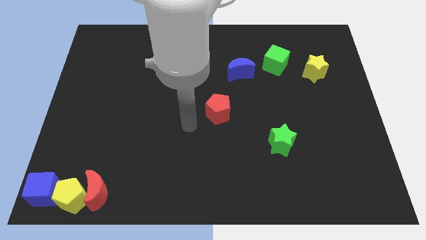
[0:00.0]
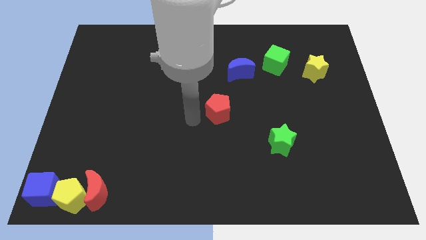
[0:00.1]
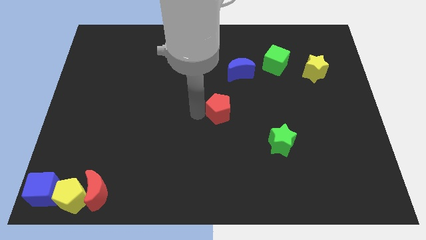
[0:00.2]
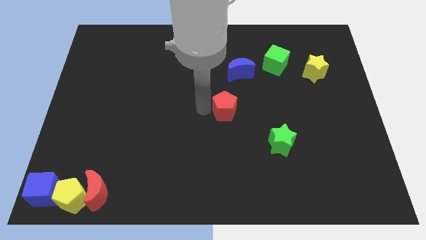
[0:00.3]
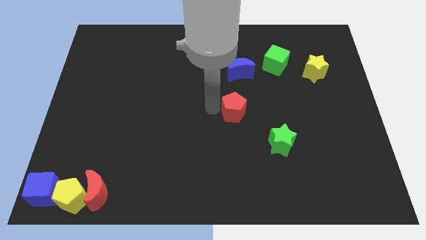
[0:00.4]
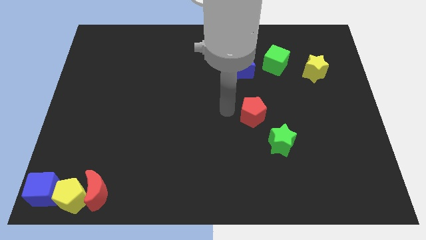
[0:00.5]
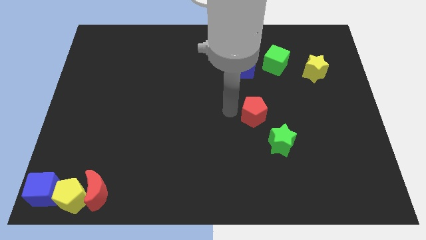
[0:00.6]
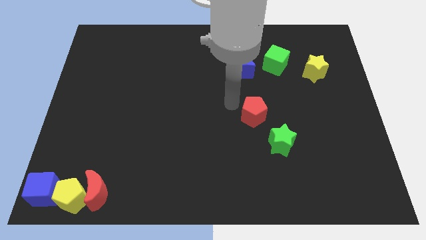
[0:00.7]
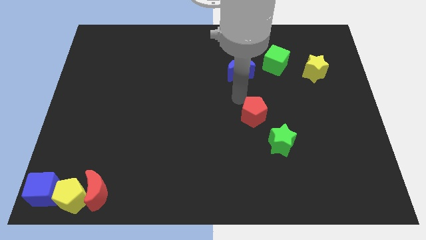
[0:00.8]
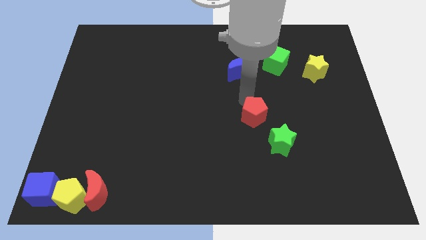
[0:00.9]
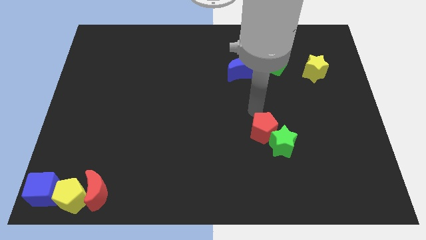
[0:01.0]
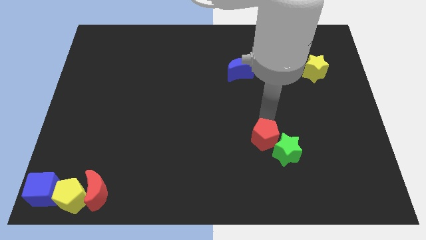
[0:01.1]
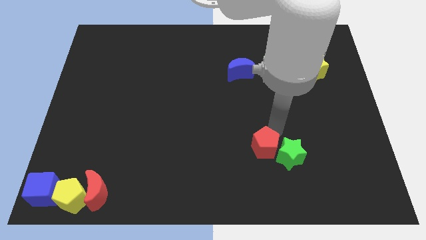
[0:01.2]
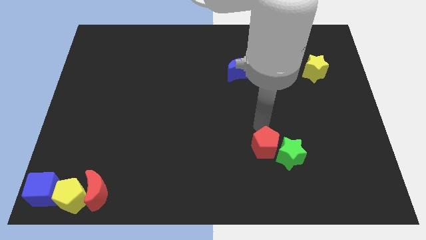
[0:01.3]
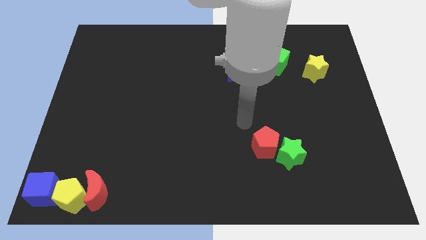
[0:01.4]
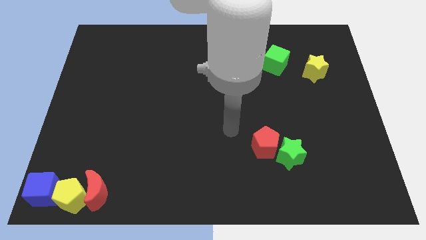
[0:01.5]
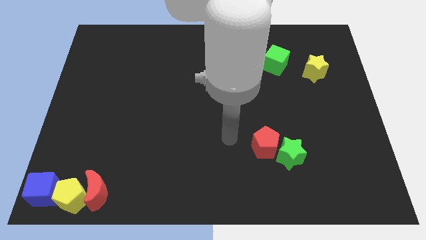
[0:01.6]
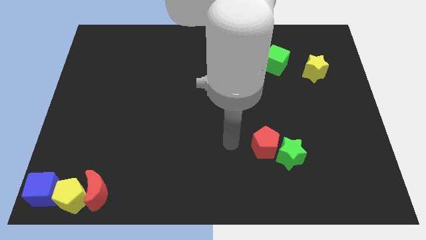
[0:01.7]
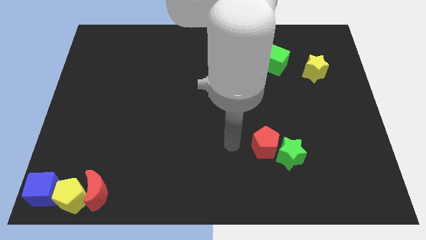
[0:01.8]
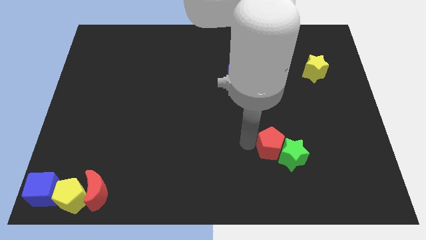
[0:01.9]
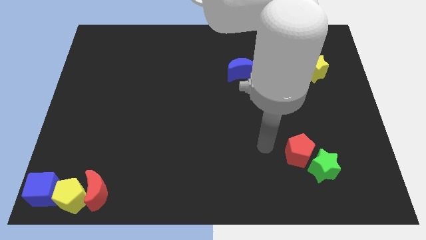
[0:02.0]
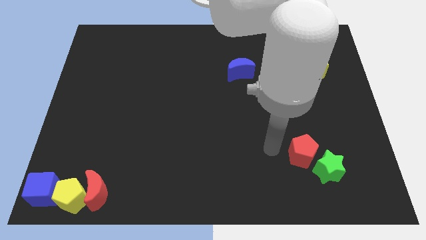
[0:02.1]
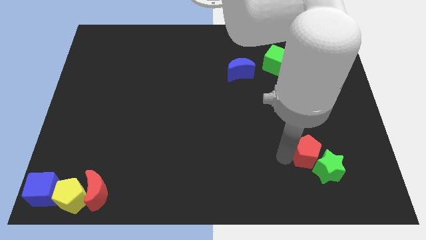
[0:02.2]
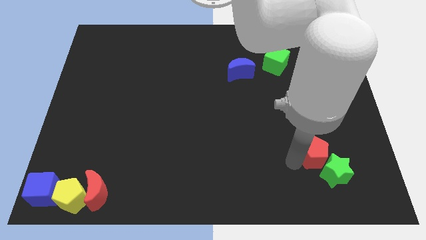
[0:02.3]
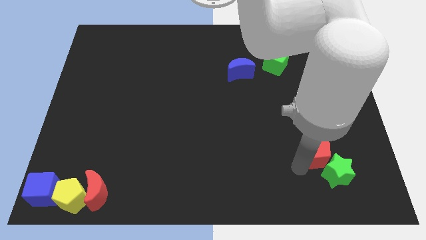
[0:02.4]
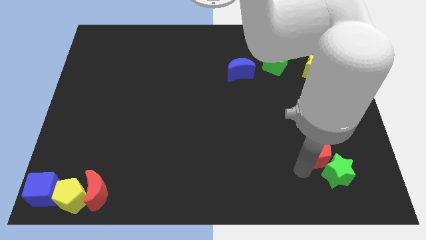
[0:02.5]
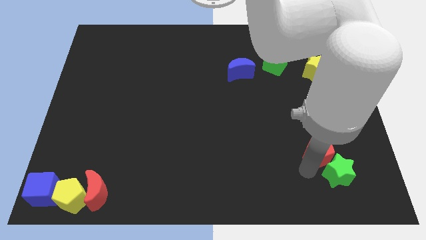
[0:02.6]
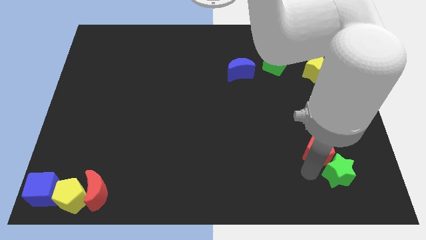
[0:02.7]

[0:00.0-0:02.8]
move red pentagon and green star towards the bottom right corner

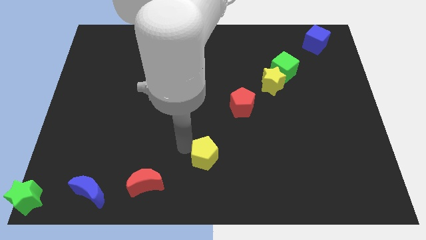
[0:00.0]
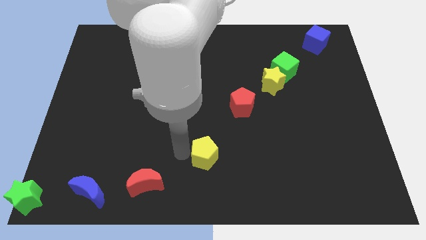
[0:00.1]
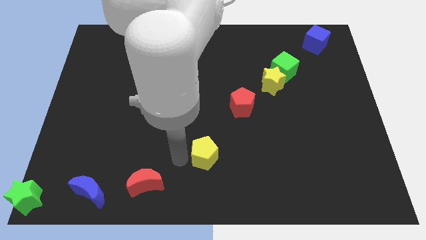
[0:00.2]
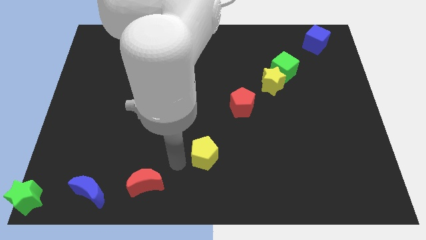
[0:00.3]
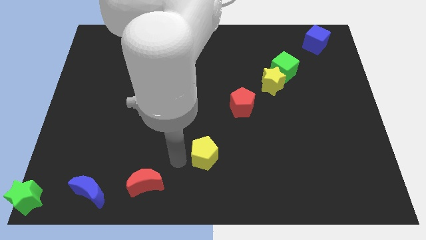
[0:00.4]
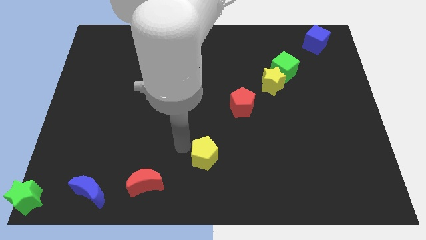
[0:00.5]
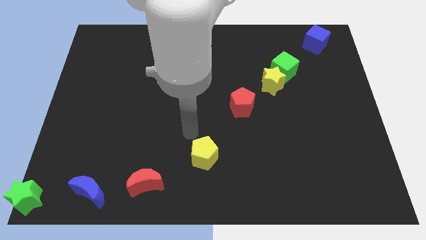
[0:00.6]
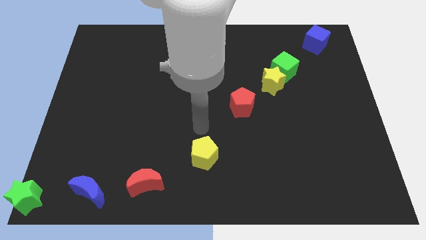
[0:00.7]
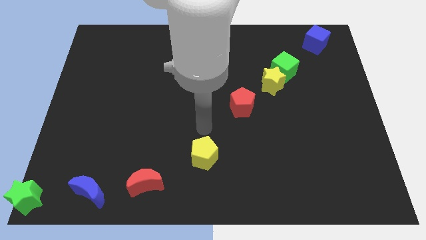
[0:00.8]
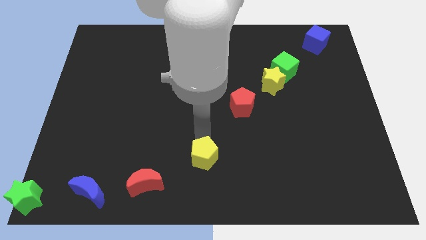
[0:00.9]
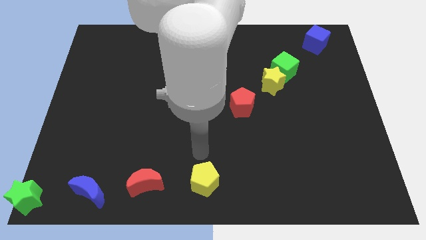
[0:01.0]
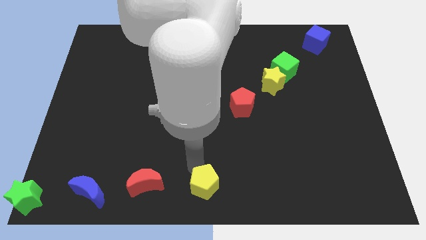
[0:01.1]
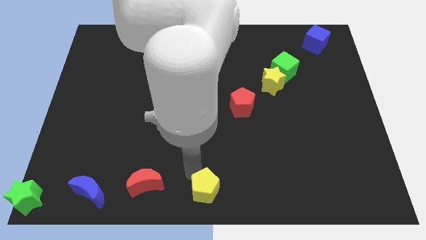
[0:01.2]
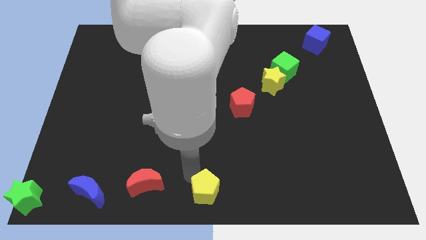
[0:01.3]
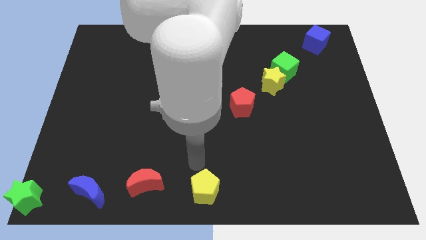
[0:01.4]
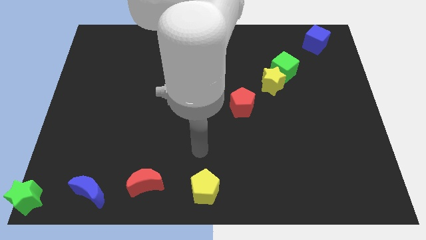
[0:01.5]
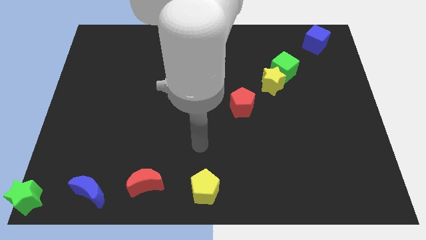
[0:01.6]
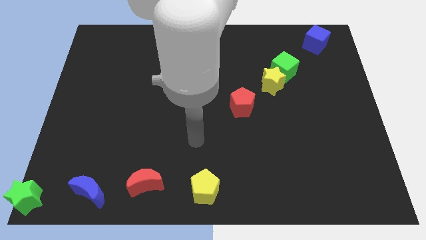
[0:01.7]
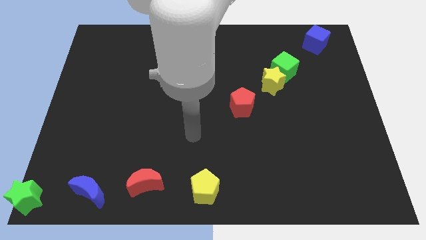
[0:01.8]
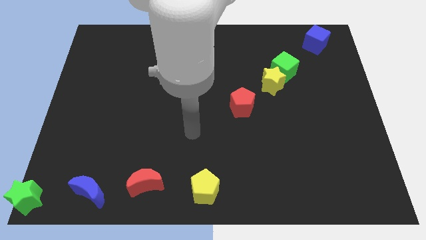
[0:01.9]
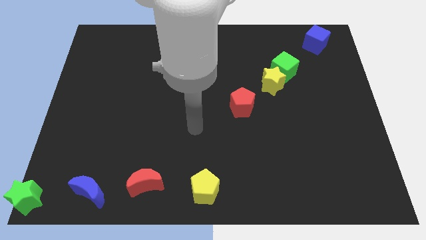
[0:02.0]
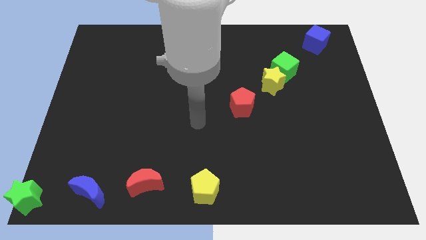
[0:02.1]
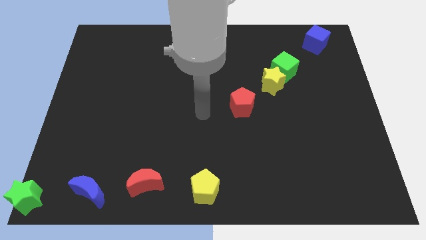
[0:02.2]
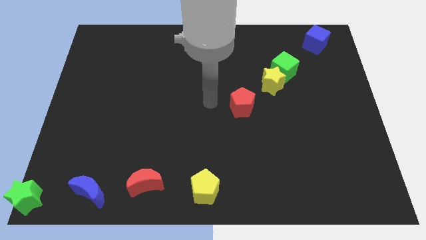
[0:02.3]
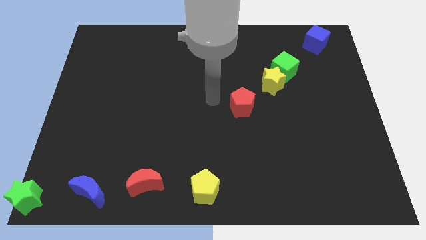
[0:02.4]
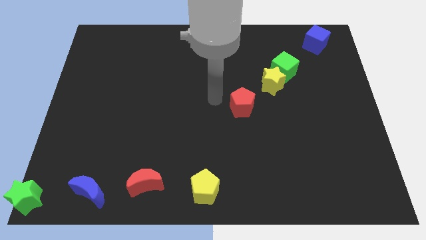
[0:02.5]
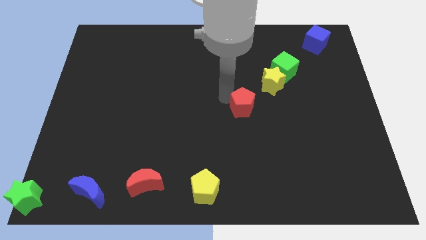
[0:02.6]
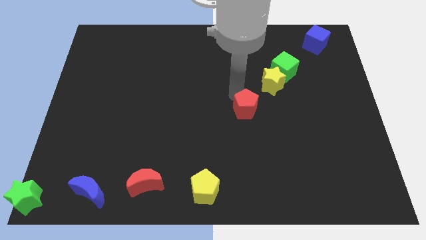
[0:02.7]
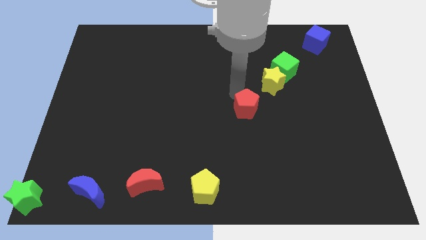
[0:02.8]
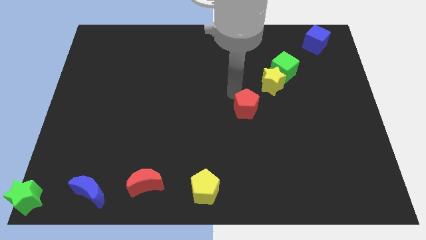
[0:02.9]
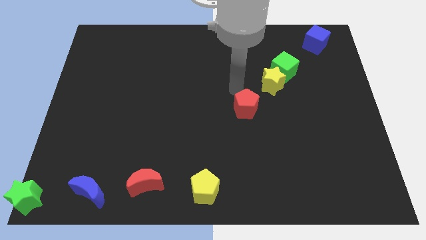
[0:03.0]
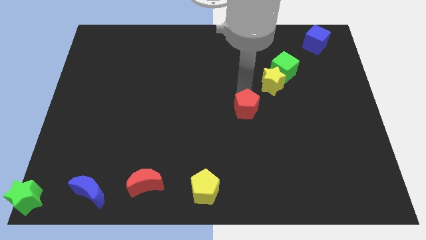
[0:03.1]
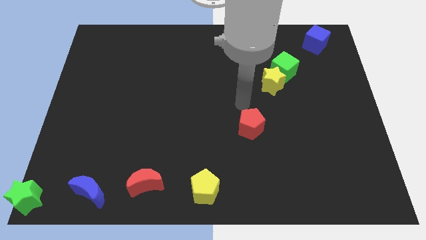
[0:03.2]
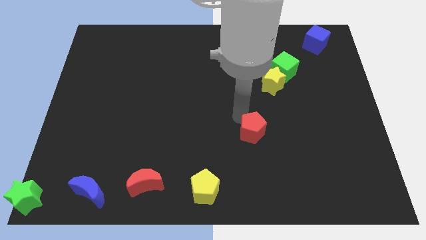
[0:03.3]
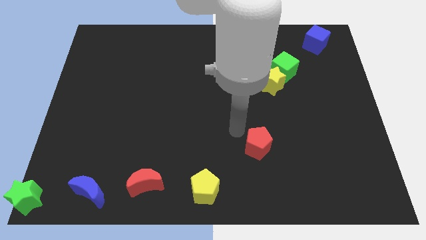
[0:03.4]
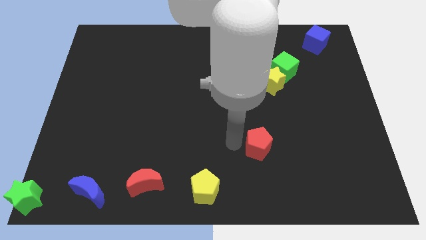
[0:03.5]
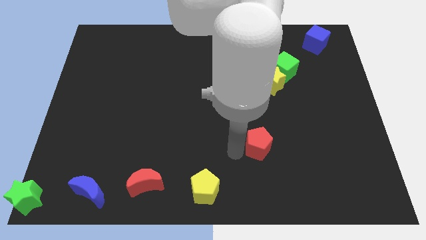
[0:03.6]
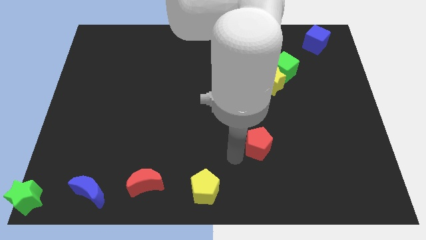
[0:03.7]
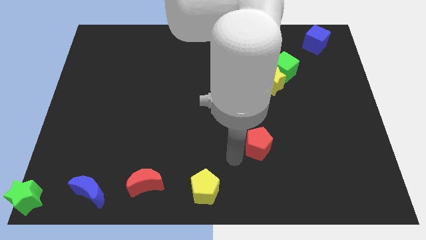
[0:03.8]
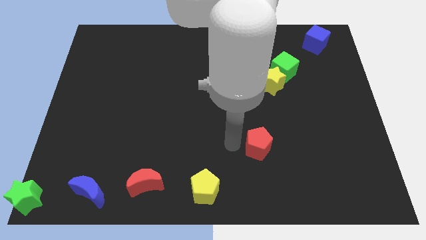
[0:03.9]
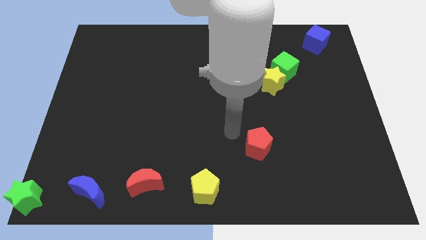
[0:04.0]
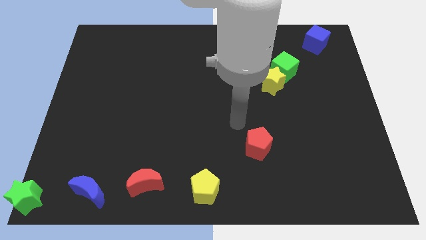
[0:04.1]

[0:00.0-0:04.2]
move red pentagon towards bottom
